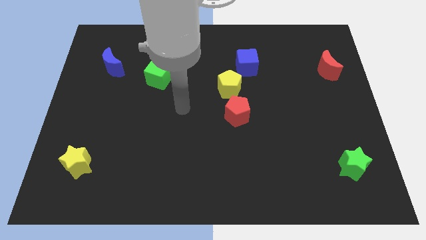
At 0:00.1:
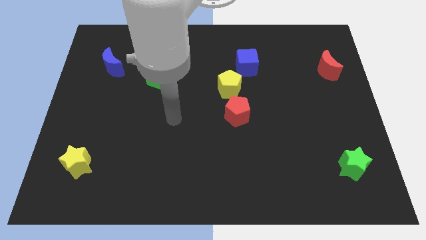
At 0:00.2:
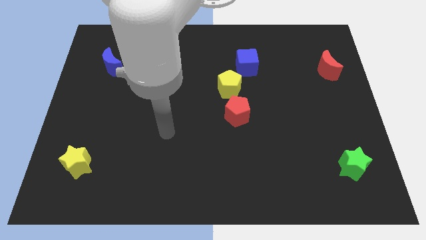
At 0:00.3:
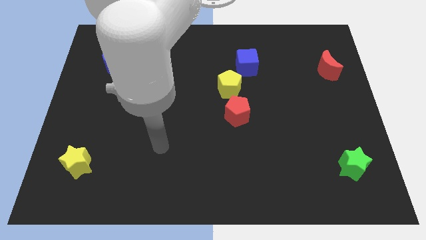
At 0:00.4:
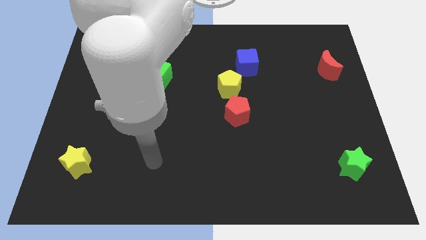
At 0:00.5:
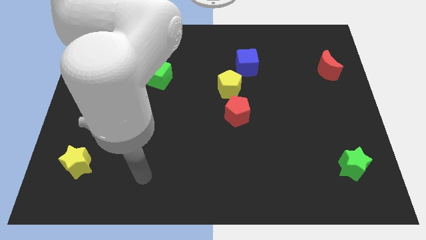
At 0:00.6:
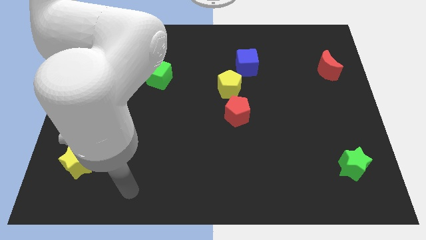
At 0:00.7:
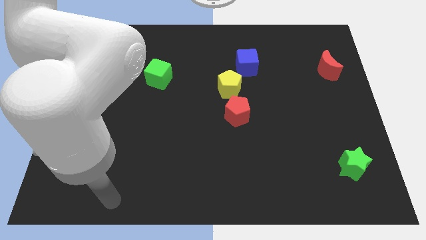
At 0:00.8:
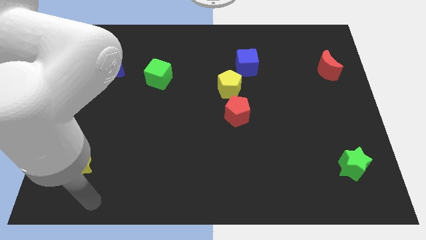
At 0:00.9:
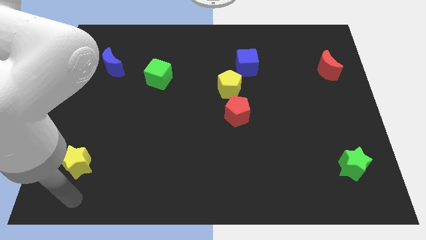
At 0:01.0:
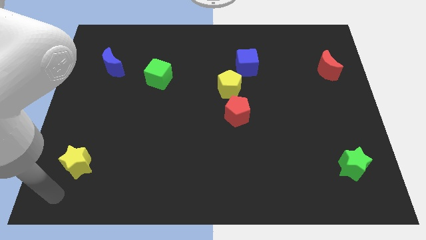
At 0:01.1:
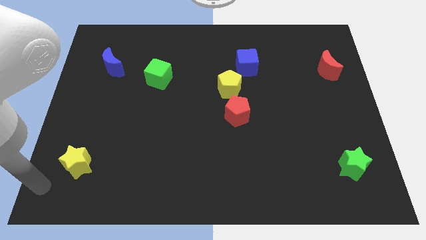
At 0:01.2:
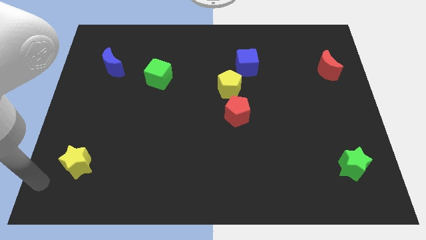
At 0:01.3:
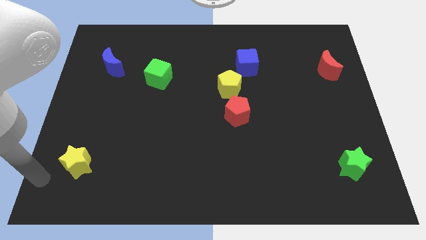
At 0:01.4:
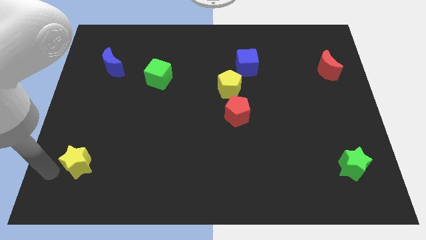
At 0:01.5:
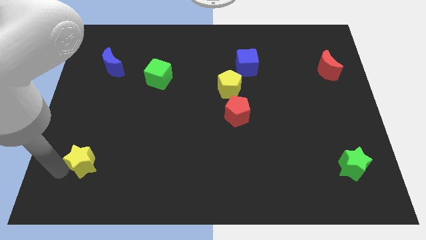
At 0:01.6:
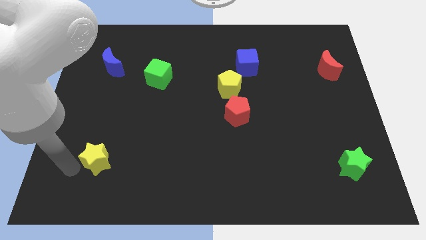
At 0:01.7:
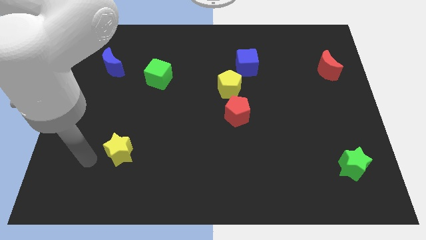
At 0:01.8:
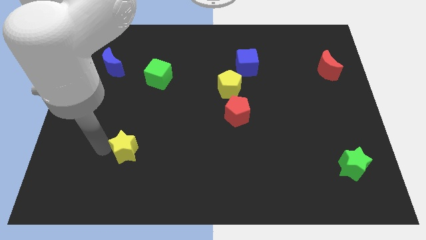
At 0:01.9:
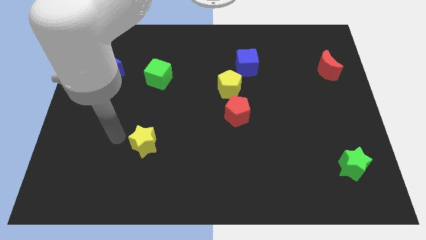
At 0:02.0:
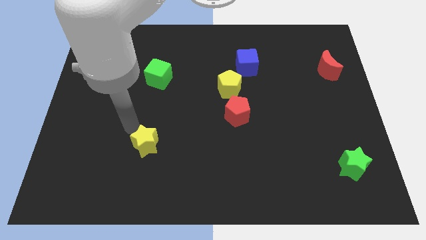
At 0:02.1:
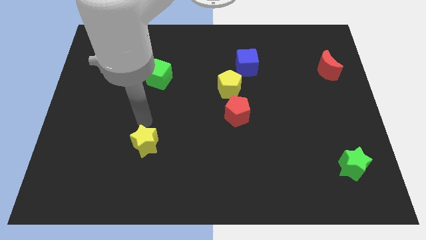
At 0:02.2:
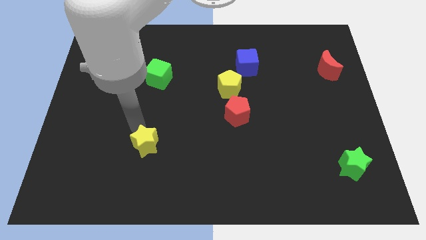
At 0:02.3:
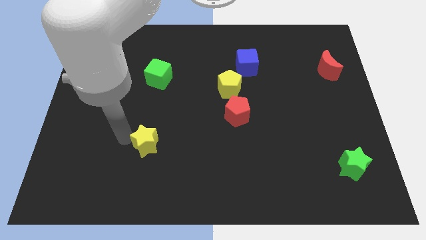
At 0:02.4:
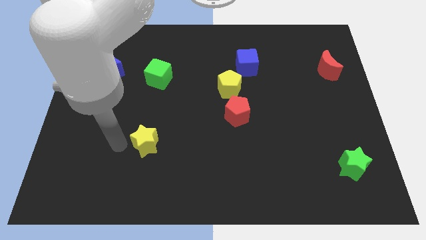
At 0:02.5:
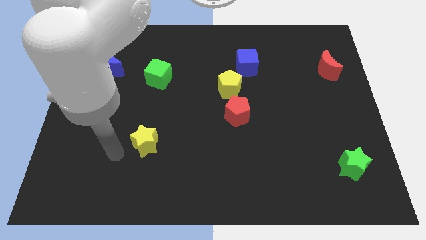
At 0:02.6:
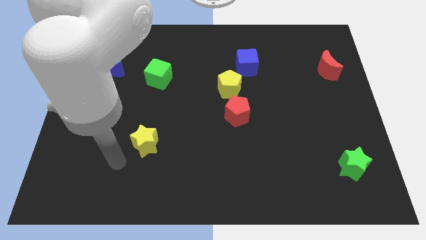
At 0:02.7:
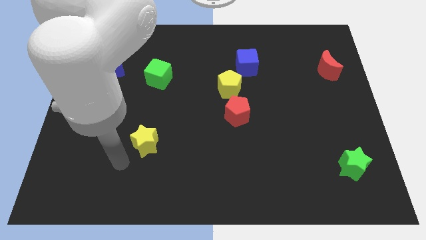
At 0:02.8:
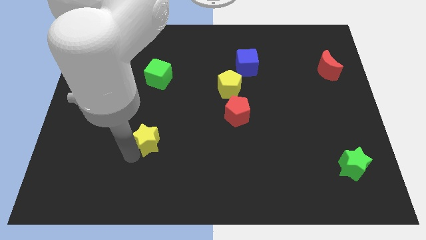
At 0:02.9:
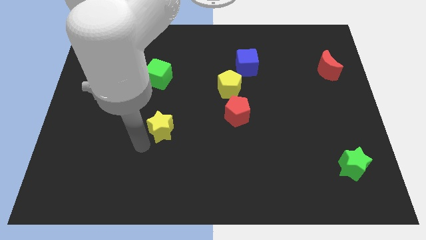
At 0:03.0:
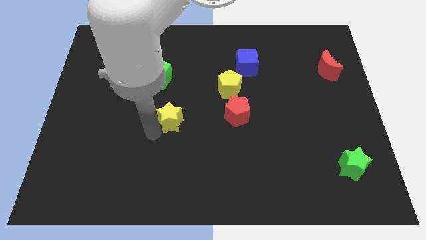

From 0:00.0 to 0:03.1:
move yellow star towards center

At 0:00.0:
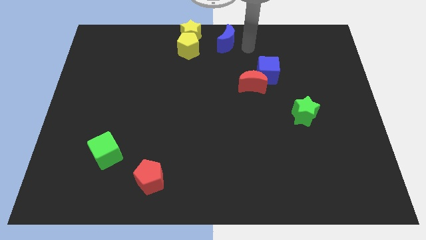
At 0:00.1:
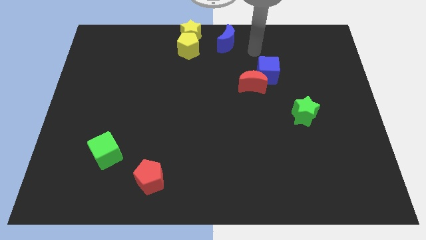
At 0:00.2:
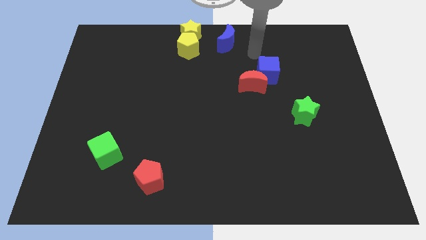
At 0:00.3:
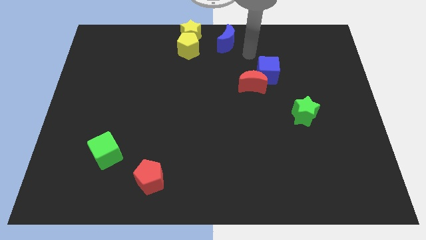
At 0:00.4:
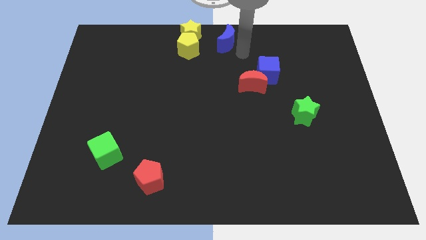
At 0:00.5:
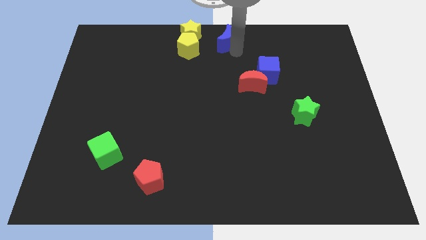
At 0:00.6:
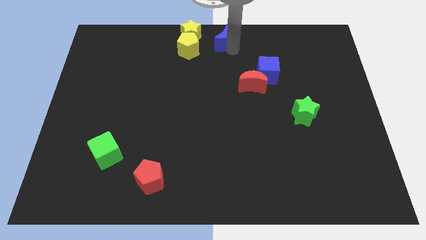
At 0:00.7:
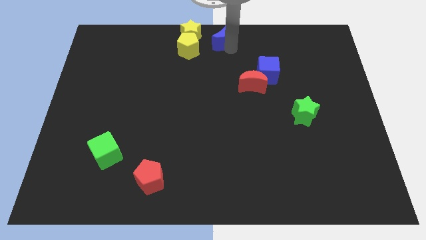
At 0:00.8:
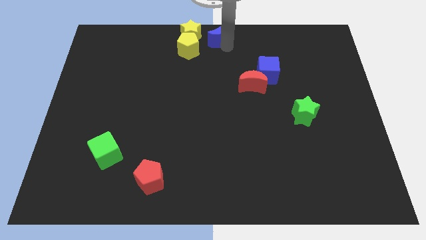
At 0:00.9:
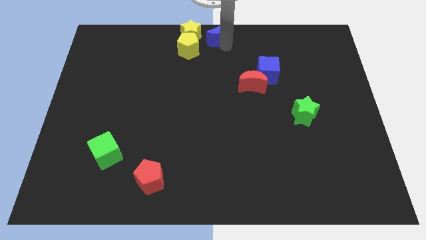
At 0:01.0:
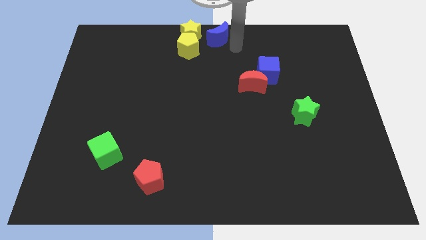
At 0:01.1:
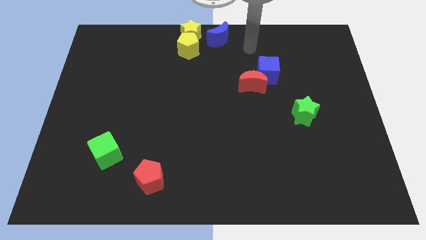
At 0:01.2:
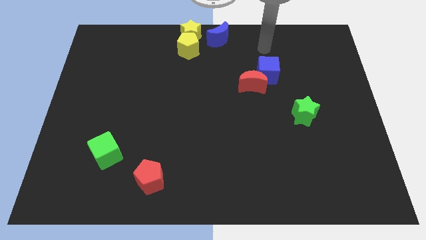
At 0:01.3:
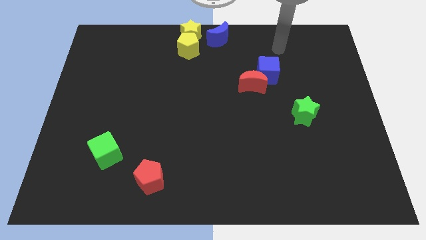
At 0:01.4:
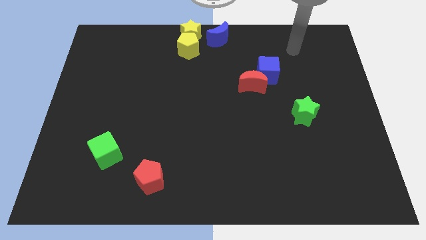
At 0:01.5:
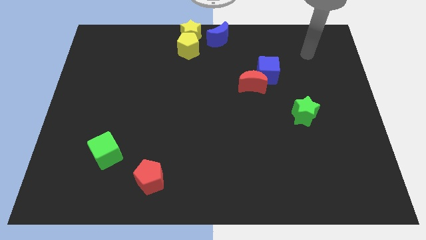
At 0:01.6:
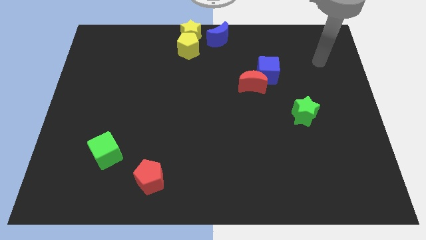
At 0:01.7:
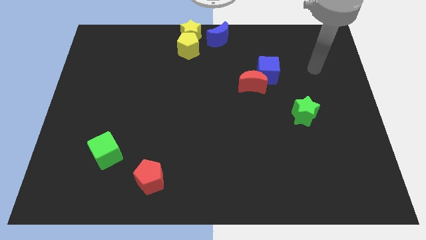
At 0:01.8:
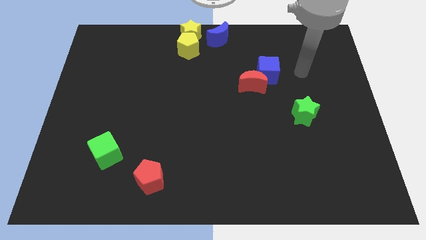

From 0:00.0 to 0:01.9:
move the blue crescent to the right side of the yellow star

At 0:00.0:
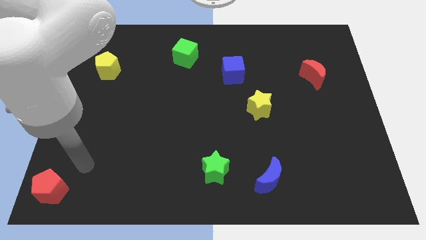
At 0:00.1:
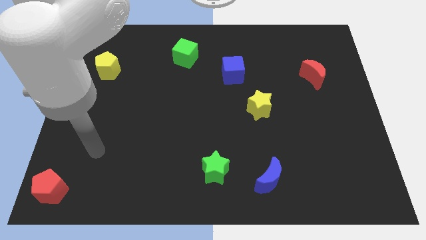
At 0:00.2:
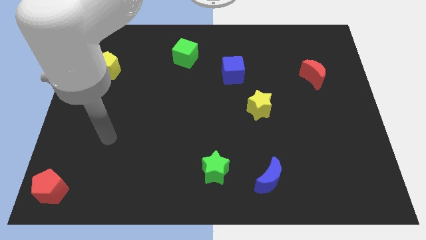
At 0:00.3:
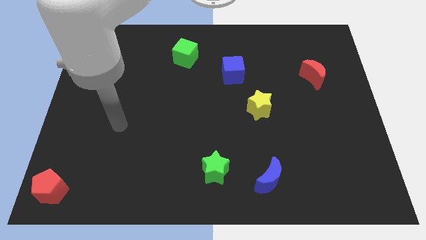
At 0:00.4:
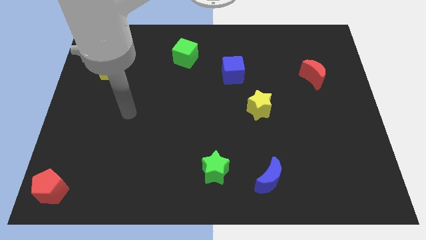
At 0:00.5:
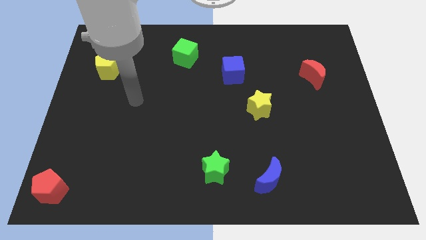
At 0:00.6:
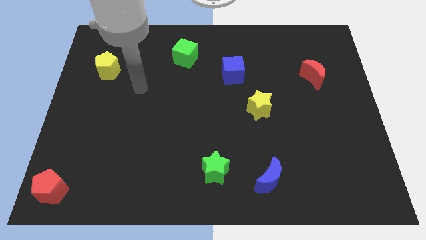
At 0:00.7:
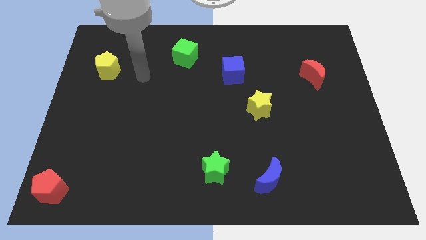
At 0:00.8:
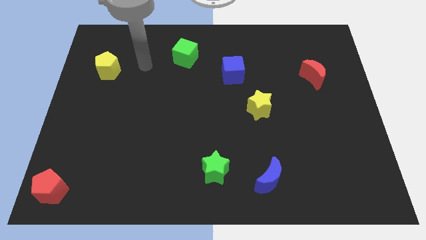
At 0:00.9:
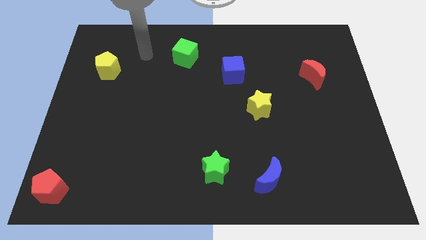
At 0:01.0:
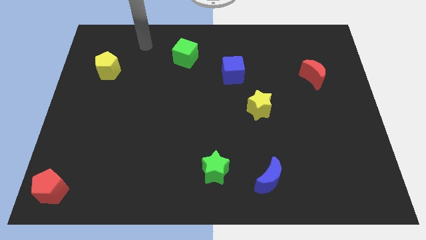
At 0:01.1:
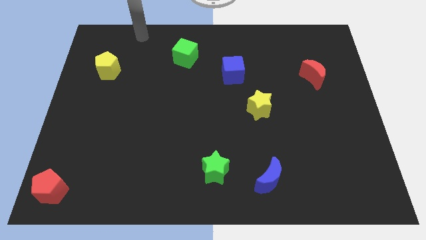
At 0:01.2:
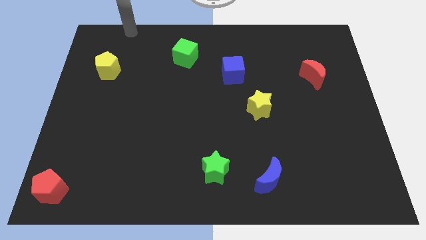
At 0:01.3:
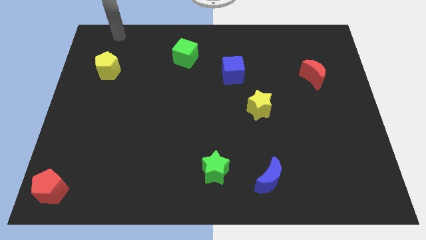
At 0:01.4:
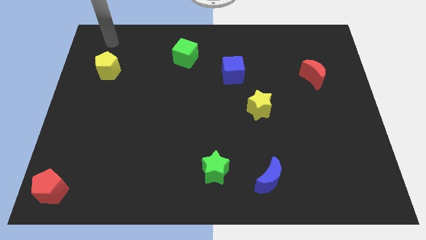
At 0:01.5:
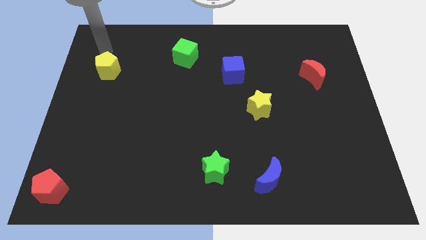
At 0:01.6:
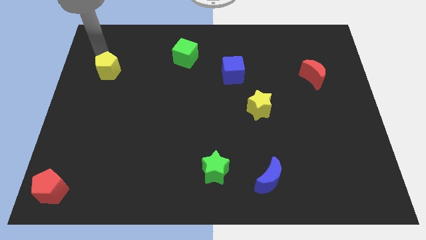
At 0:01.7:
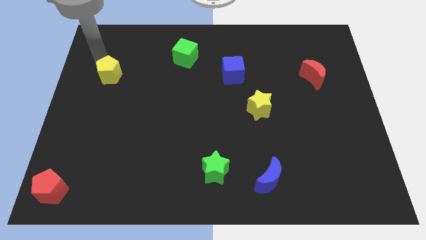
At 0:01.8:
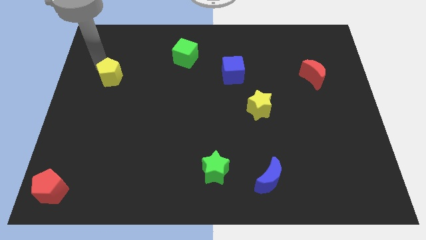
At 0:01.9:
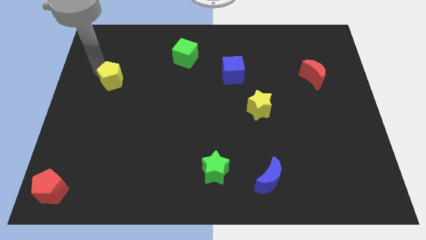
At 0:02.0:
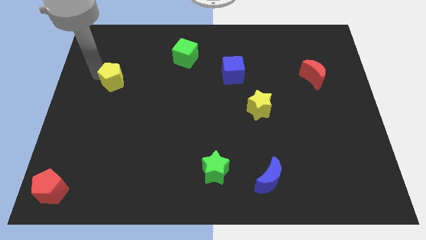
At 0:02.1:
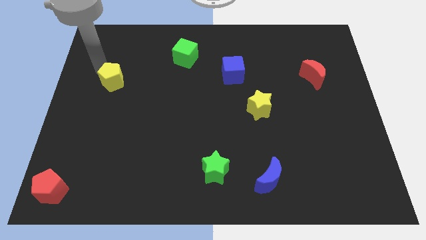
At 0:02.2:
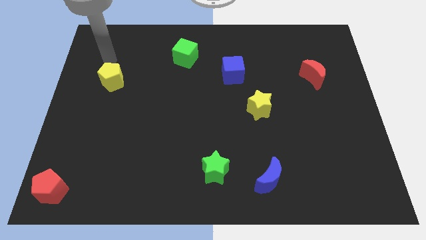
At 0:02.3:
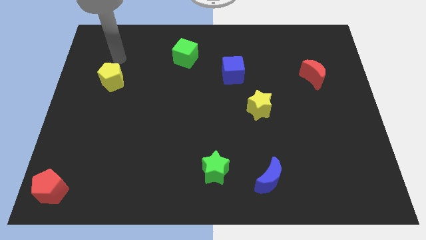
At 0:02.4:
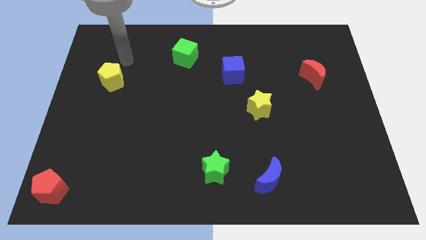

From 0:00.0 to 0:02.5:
place yellow pentagon parallel to blue cube

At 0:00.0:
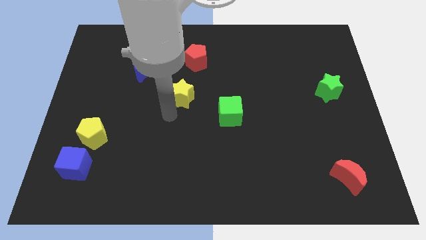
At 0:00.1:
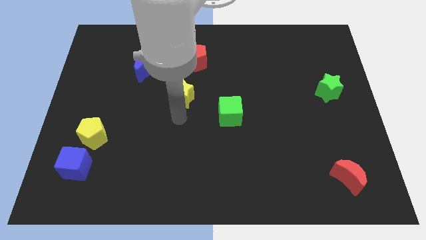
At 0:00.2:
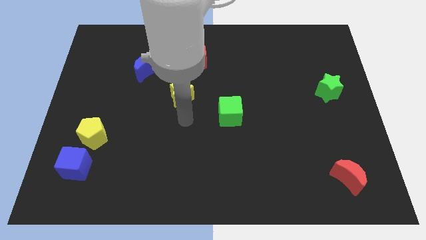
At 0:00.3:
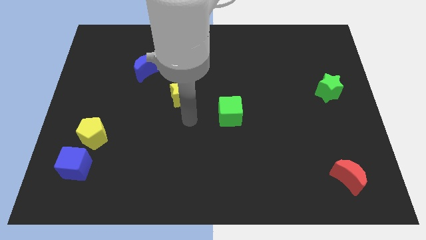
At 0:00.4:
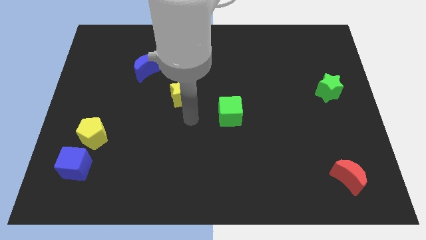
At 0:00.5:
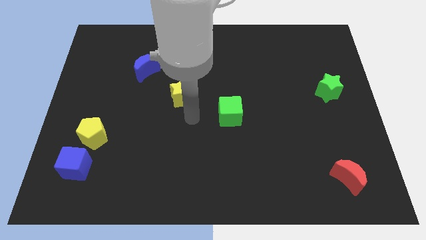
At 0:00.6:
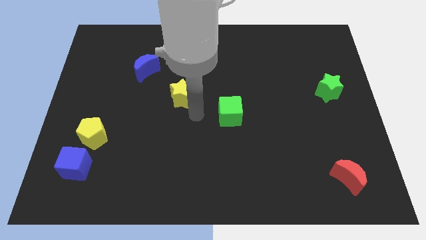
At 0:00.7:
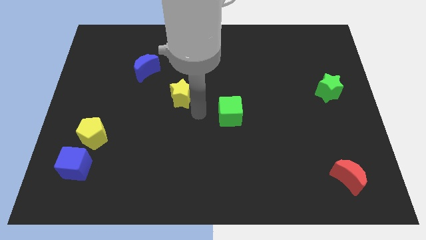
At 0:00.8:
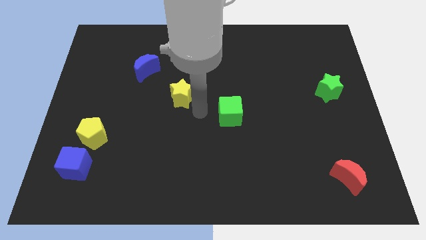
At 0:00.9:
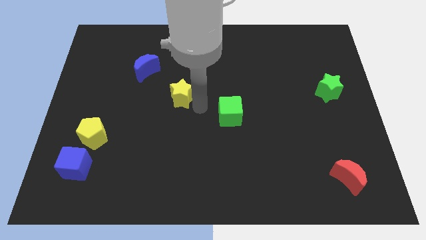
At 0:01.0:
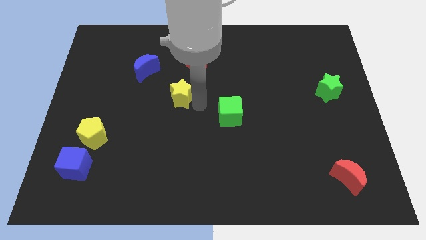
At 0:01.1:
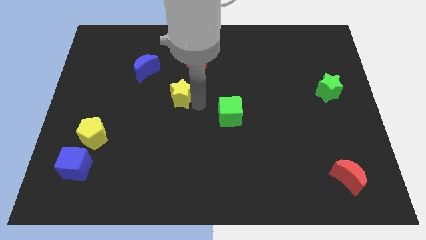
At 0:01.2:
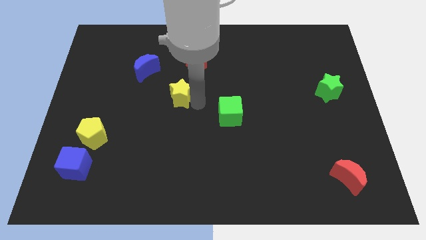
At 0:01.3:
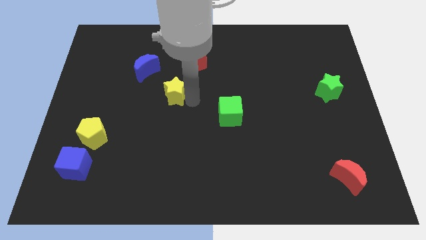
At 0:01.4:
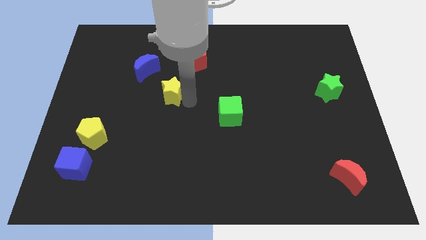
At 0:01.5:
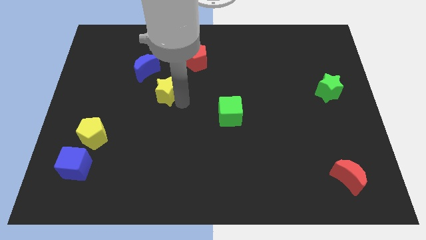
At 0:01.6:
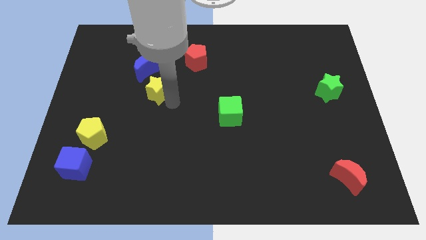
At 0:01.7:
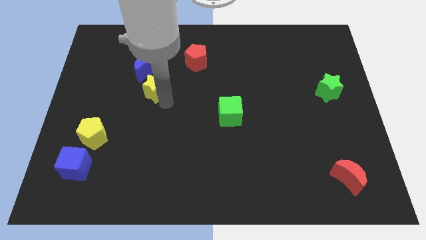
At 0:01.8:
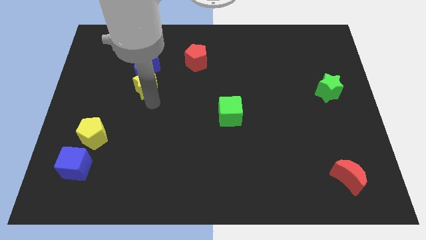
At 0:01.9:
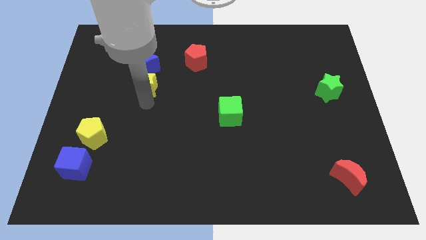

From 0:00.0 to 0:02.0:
slightly push the yellow star towards left
